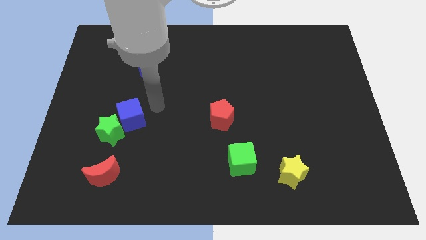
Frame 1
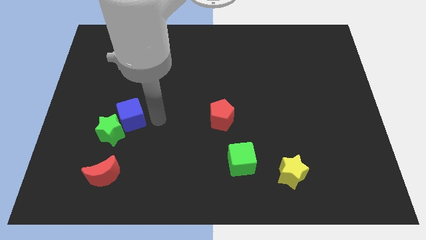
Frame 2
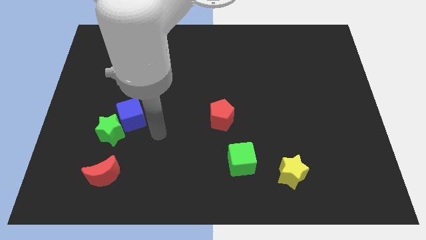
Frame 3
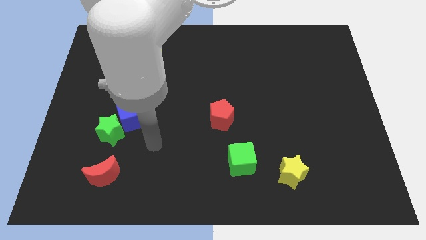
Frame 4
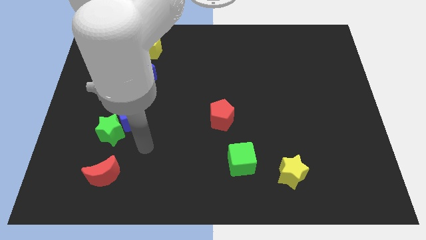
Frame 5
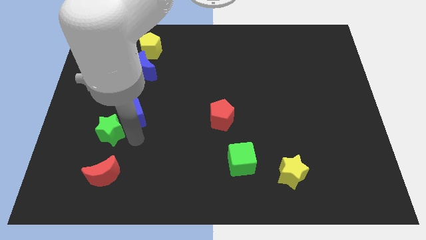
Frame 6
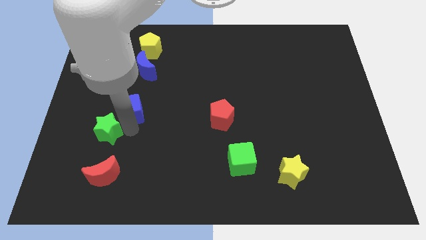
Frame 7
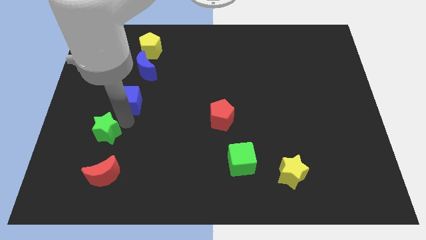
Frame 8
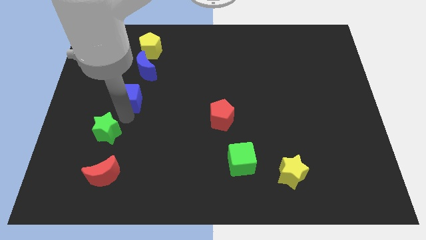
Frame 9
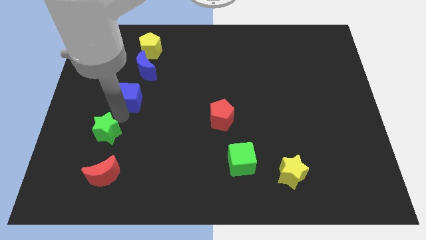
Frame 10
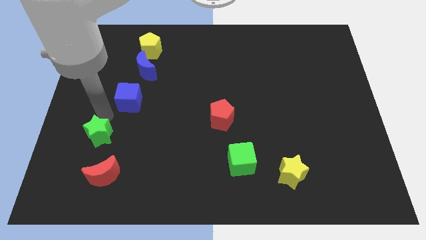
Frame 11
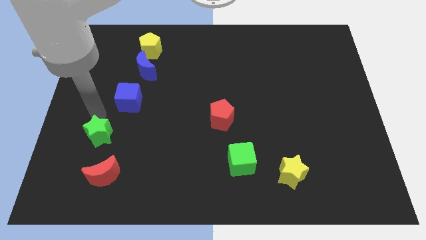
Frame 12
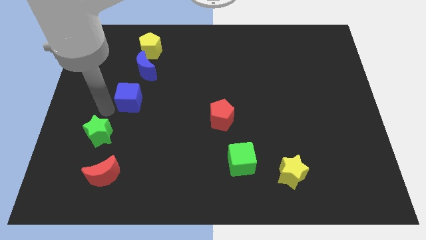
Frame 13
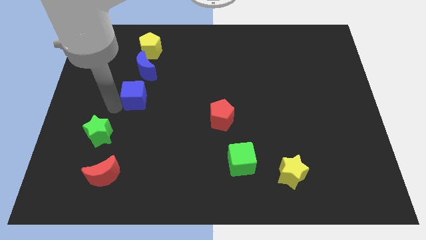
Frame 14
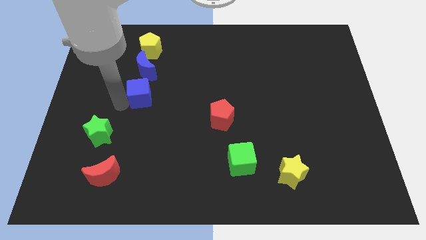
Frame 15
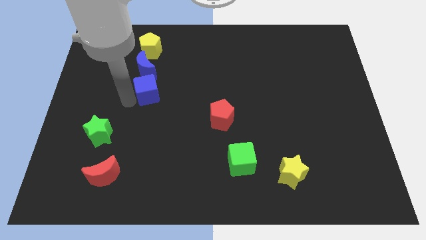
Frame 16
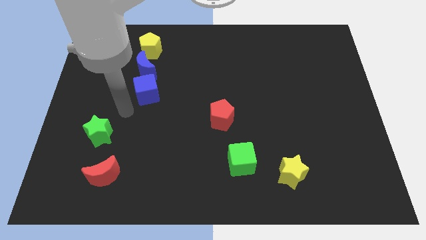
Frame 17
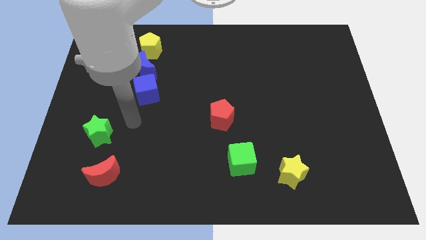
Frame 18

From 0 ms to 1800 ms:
push the blue cube into the blue crescent

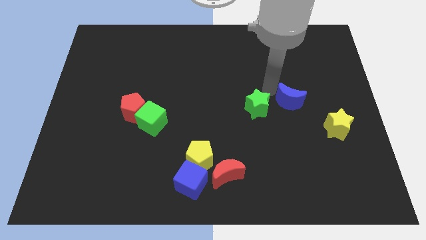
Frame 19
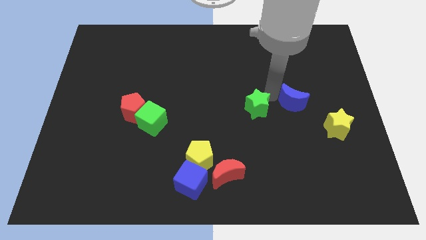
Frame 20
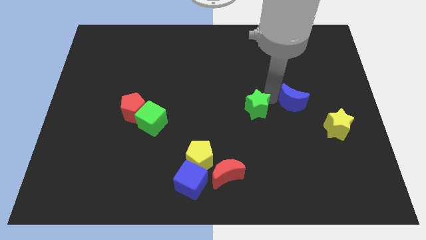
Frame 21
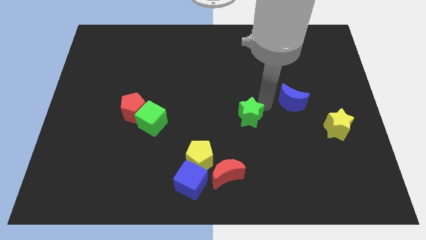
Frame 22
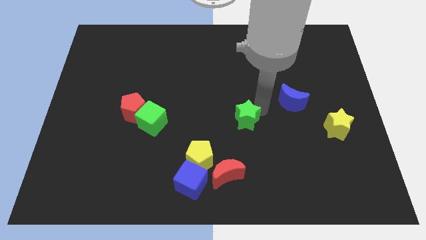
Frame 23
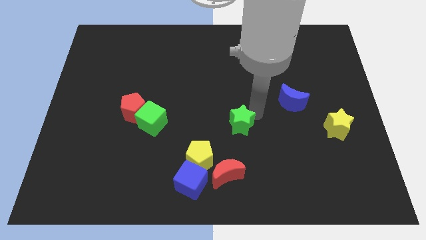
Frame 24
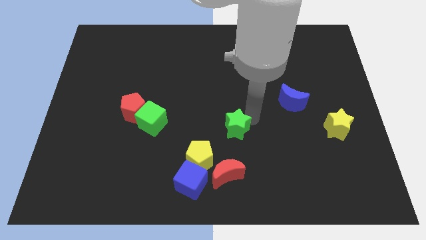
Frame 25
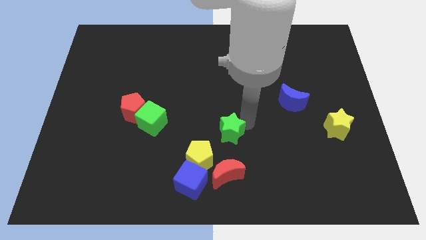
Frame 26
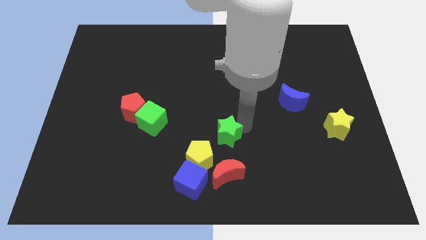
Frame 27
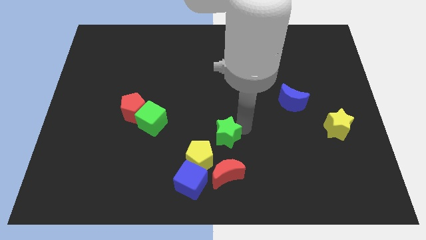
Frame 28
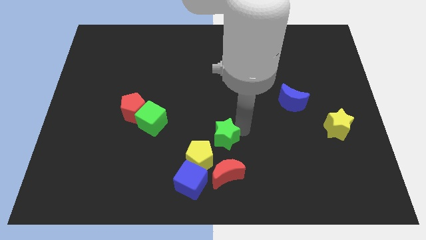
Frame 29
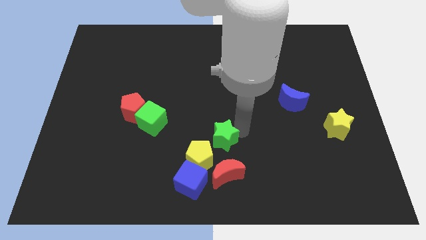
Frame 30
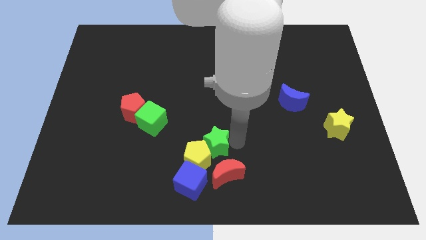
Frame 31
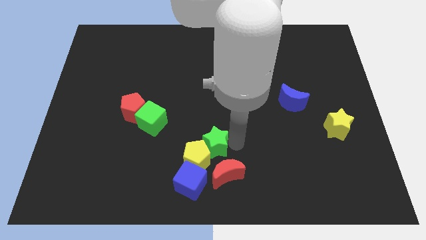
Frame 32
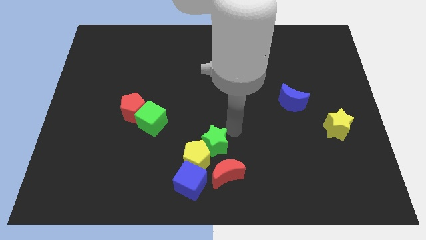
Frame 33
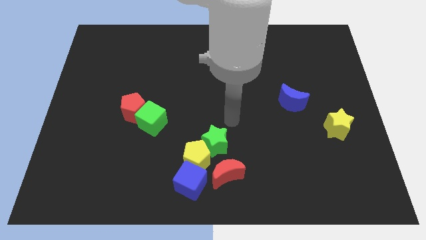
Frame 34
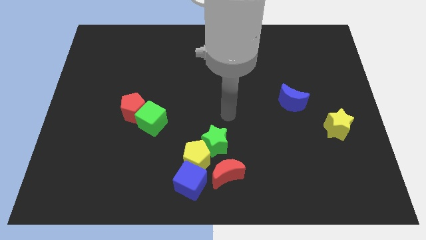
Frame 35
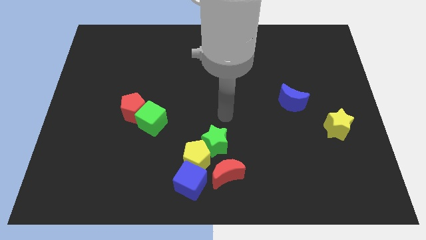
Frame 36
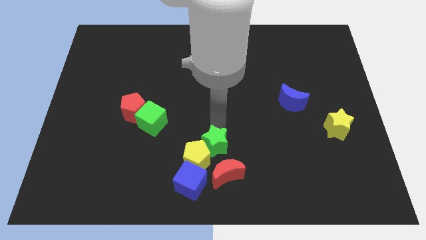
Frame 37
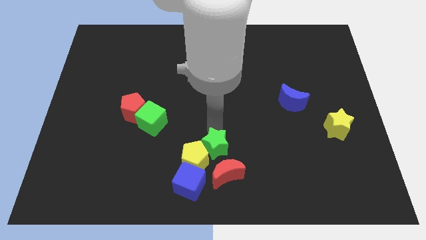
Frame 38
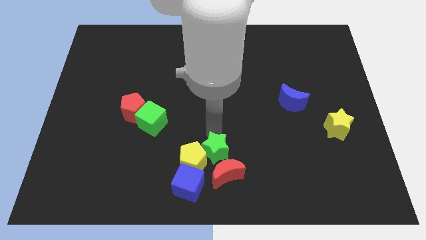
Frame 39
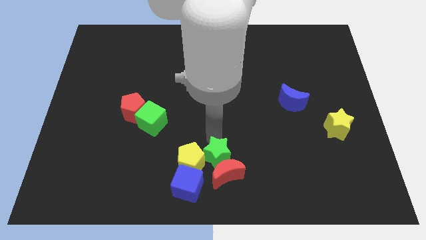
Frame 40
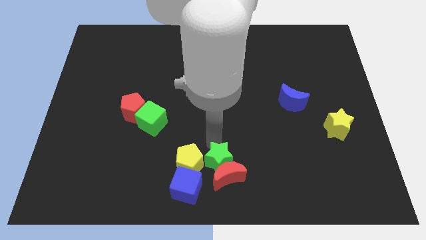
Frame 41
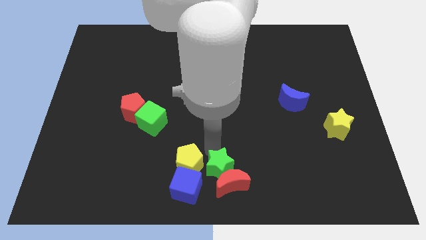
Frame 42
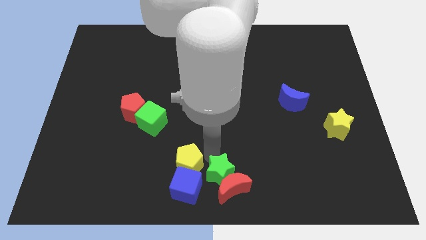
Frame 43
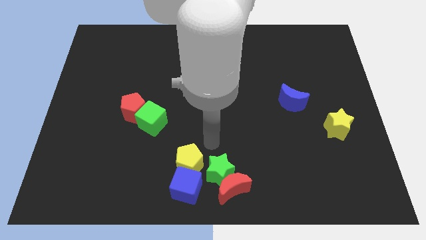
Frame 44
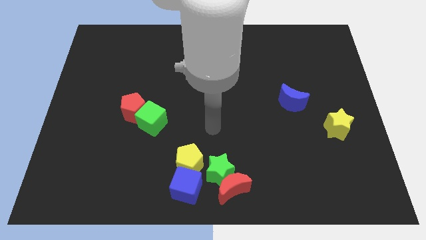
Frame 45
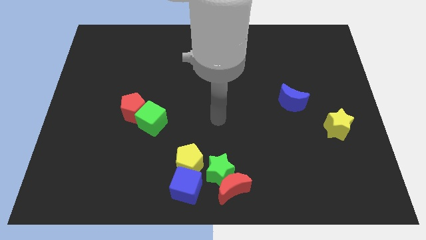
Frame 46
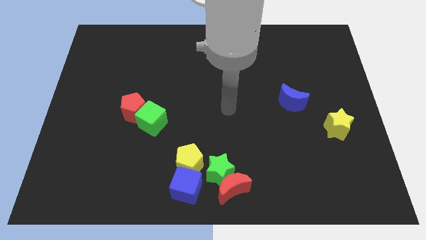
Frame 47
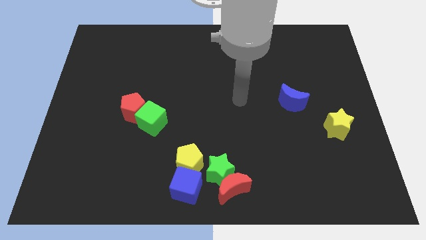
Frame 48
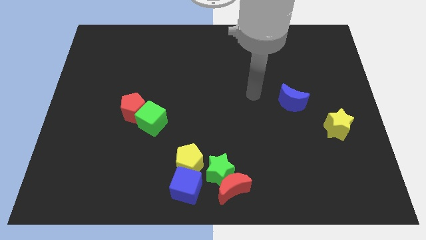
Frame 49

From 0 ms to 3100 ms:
make the green star to touch the top side of the red crescent

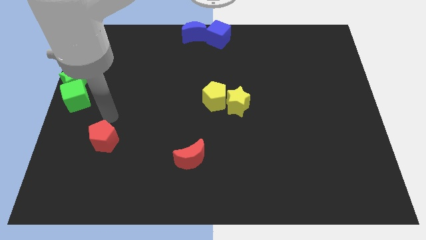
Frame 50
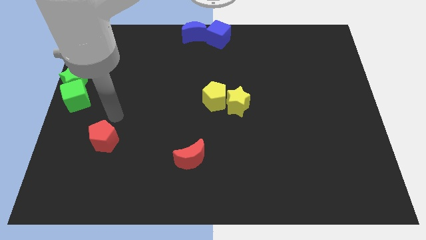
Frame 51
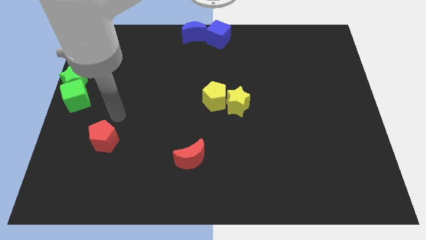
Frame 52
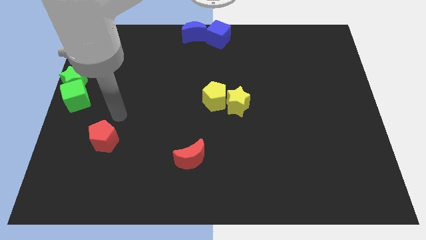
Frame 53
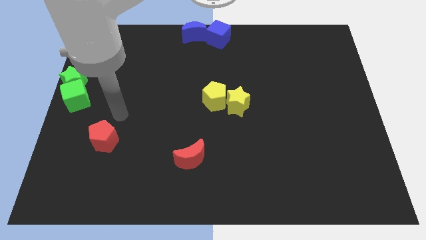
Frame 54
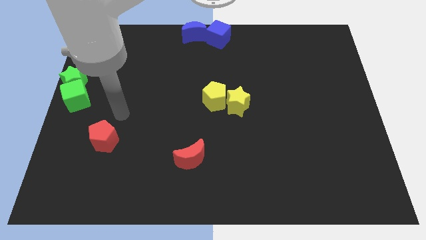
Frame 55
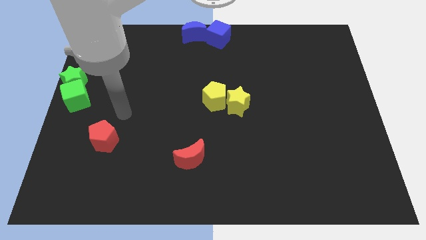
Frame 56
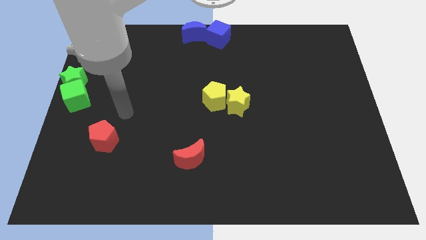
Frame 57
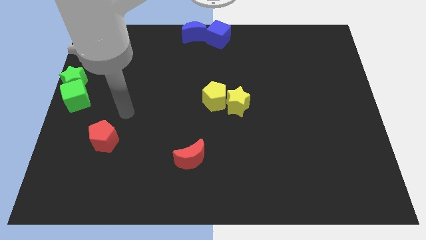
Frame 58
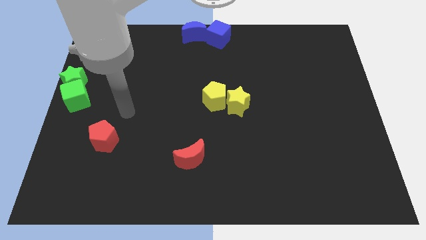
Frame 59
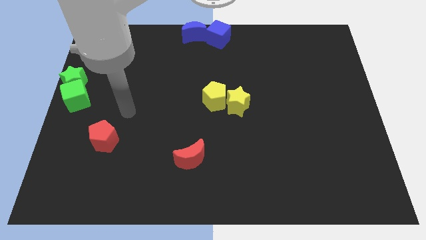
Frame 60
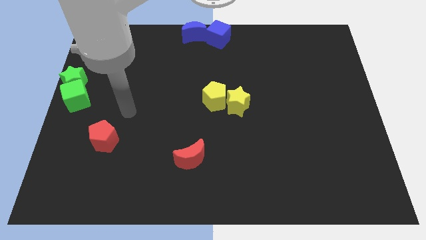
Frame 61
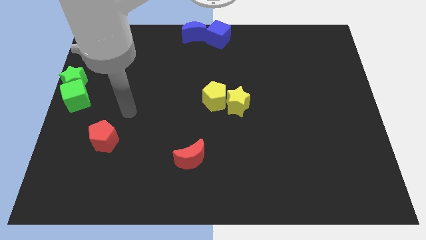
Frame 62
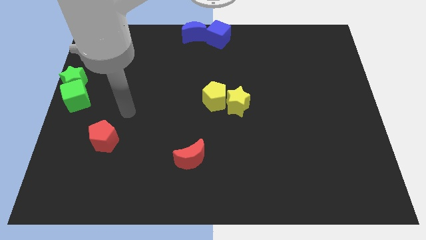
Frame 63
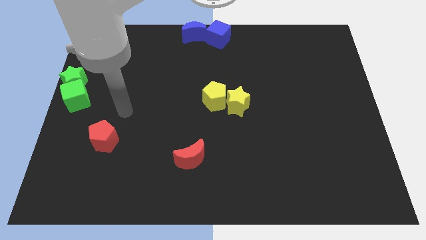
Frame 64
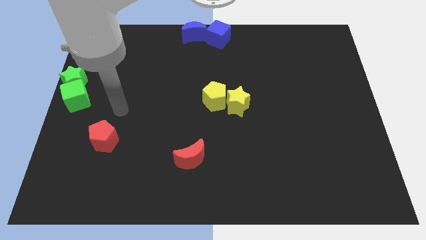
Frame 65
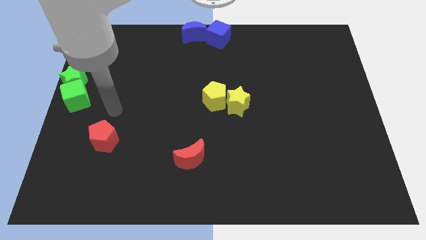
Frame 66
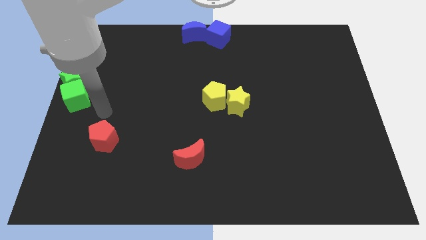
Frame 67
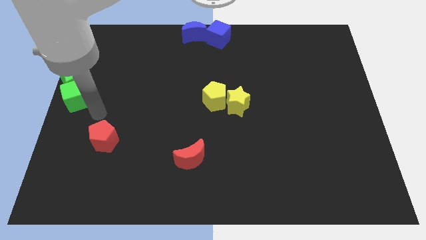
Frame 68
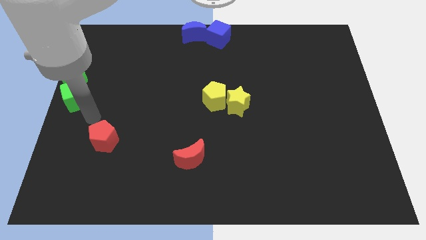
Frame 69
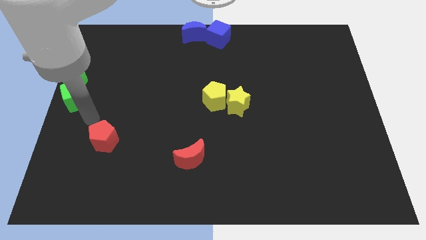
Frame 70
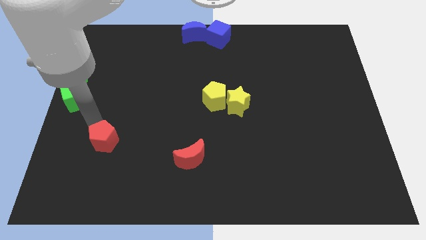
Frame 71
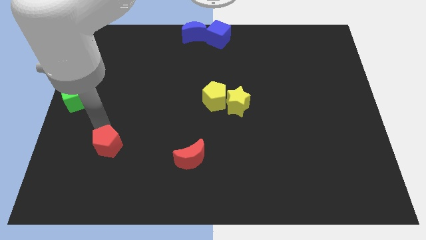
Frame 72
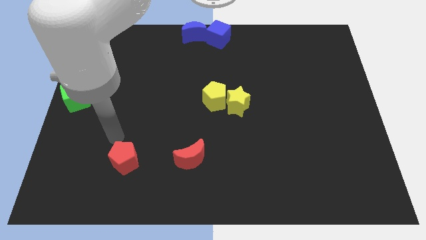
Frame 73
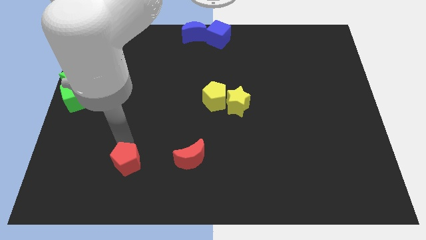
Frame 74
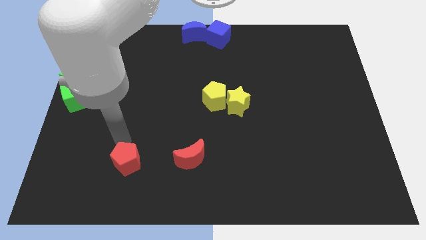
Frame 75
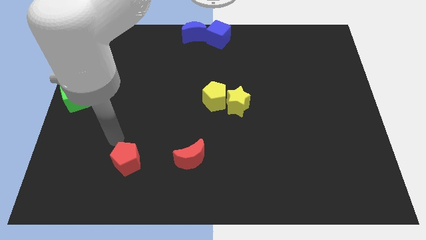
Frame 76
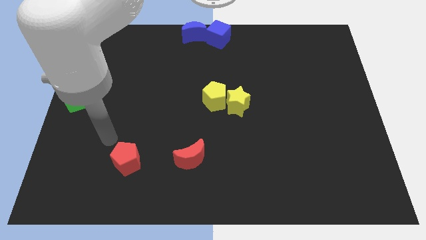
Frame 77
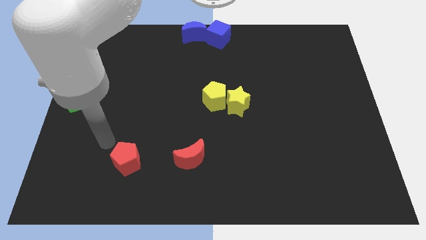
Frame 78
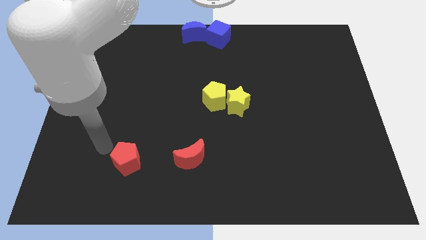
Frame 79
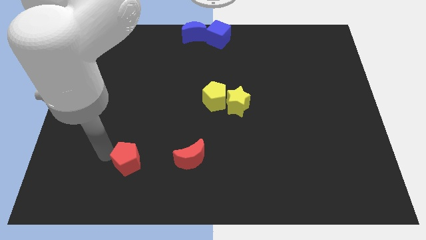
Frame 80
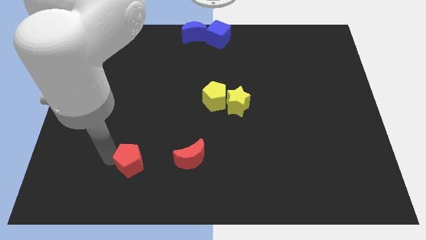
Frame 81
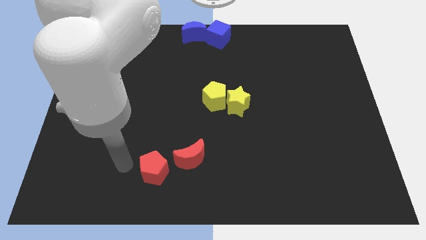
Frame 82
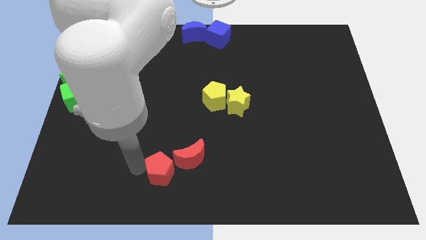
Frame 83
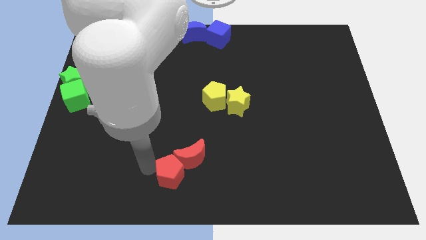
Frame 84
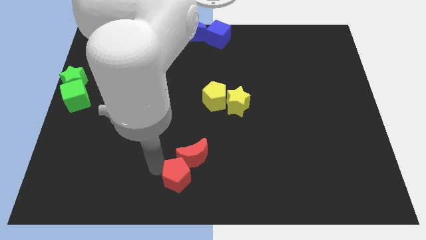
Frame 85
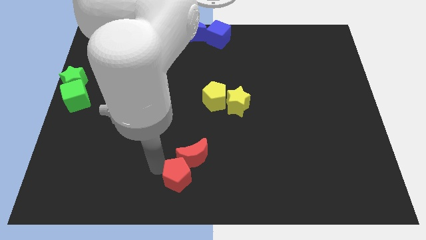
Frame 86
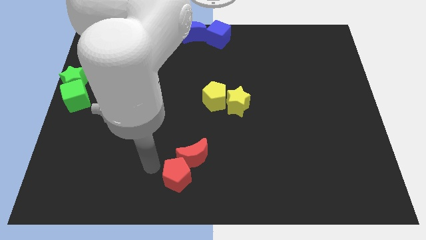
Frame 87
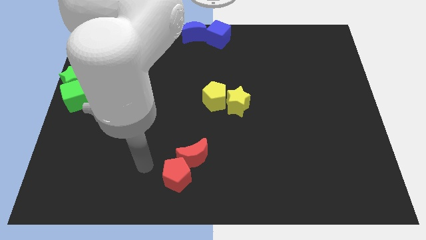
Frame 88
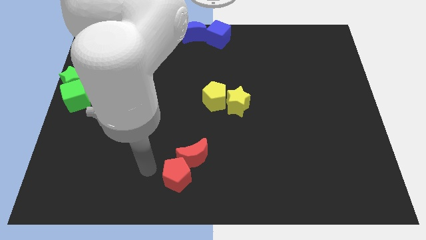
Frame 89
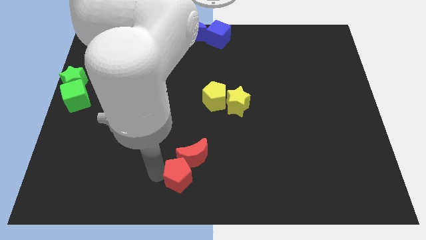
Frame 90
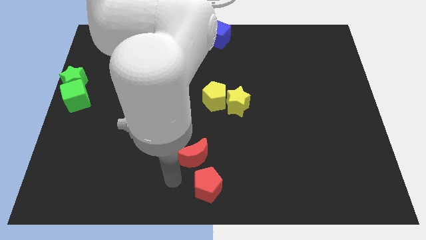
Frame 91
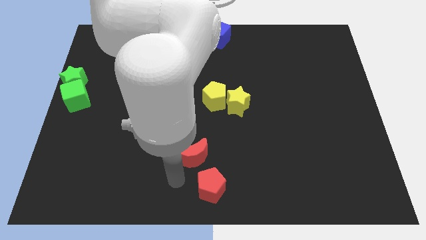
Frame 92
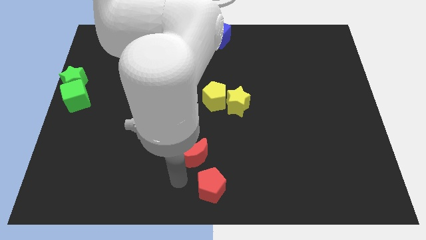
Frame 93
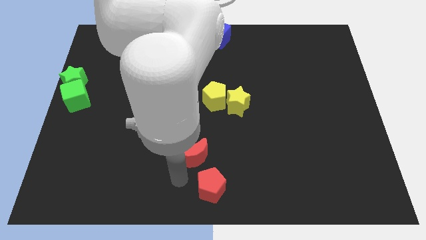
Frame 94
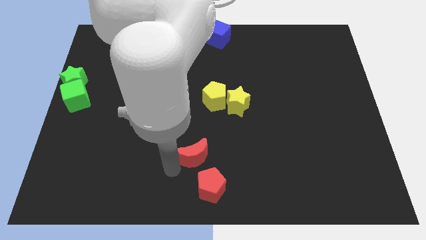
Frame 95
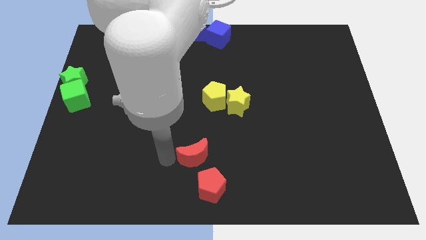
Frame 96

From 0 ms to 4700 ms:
push the red pentagon to the bottom center
